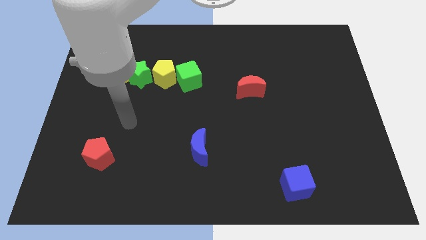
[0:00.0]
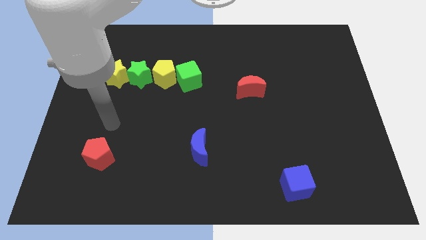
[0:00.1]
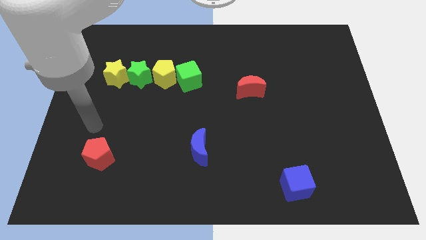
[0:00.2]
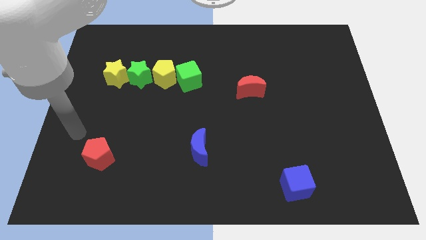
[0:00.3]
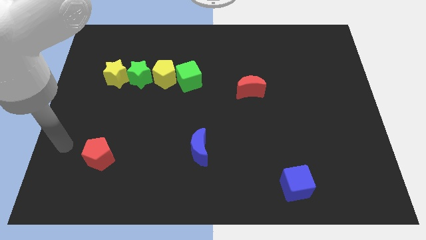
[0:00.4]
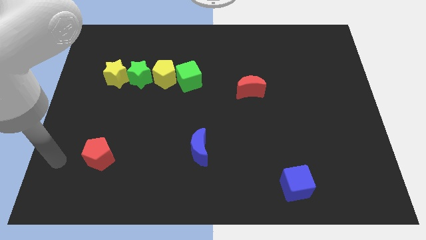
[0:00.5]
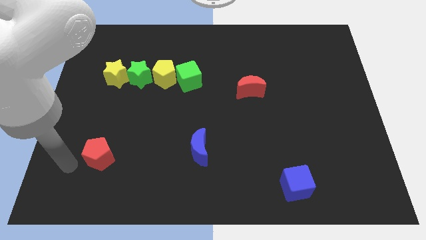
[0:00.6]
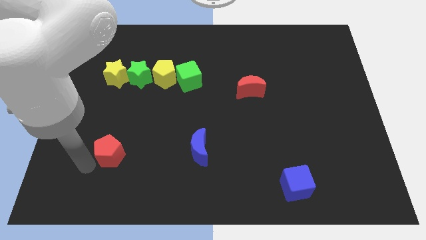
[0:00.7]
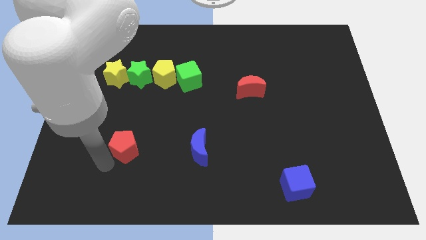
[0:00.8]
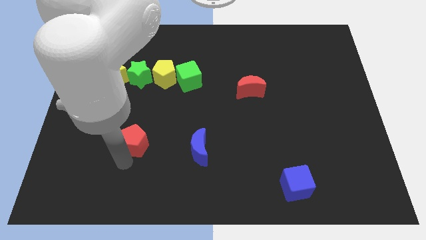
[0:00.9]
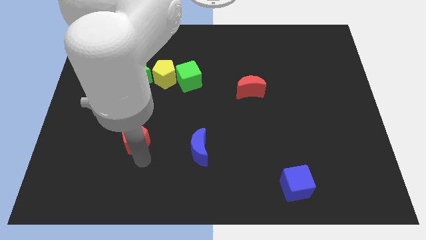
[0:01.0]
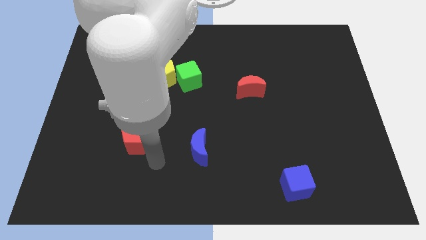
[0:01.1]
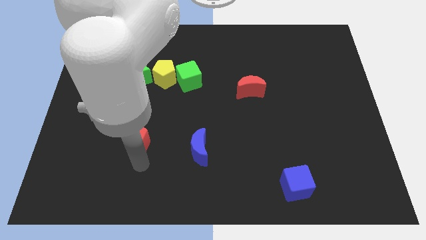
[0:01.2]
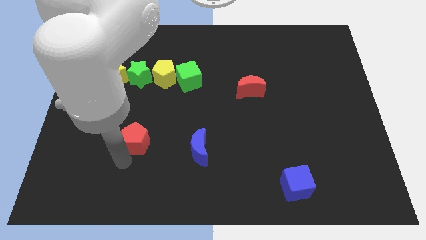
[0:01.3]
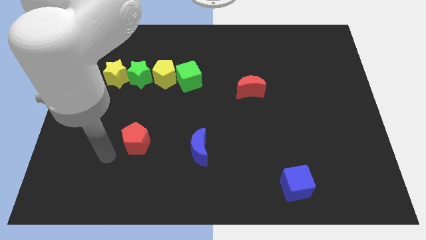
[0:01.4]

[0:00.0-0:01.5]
push red pentagon to the bottom of the green star

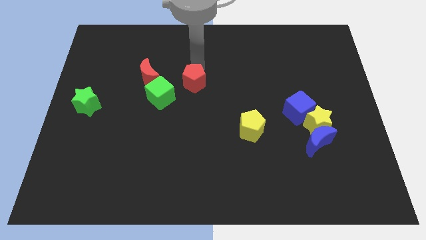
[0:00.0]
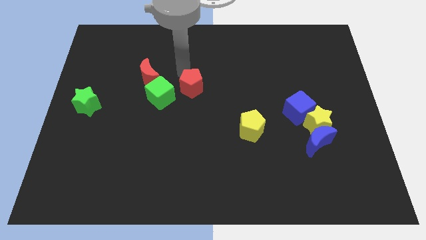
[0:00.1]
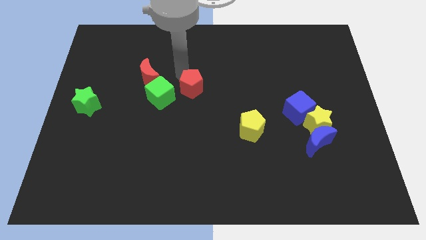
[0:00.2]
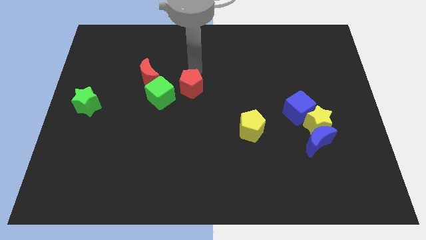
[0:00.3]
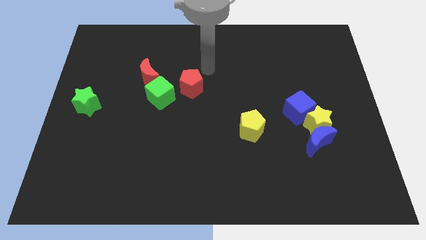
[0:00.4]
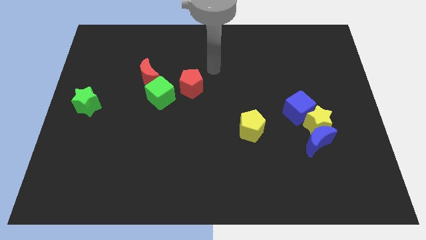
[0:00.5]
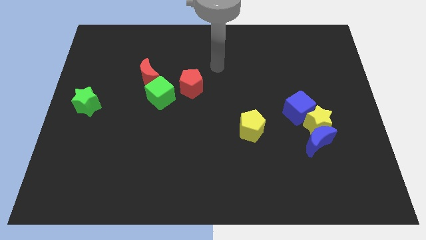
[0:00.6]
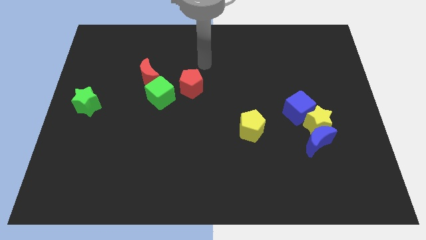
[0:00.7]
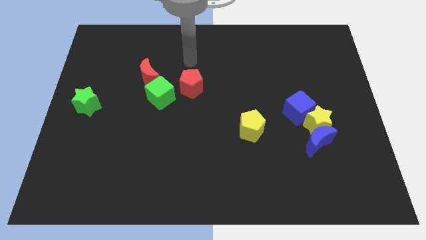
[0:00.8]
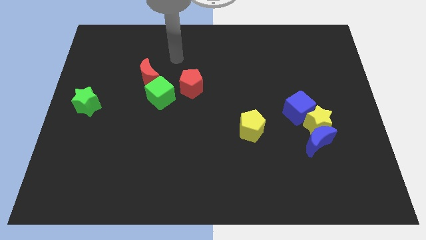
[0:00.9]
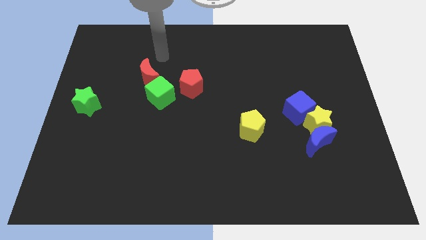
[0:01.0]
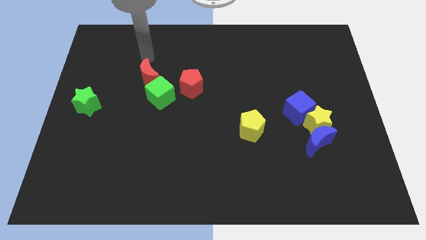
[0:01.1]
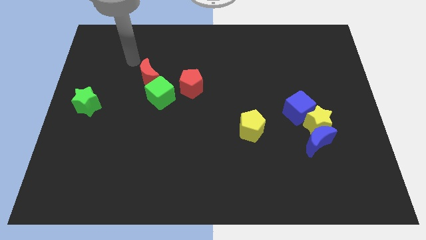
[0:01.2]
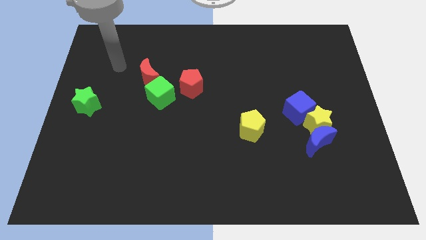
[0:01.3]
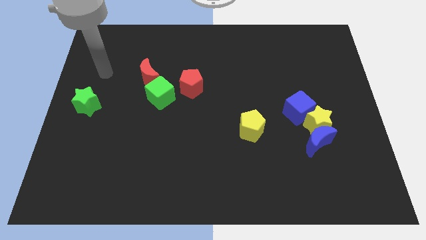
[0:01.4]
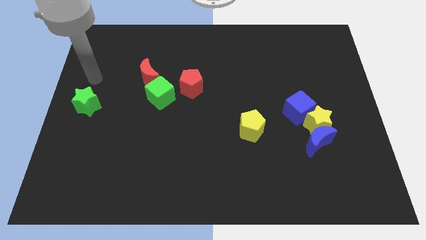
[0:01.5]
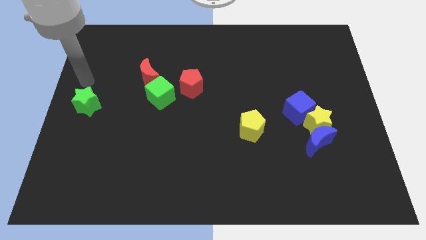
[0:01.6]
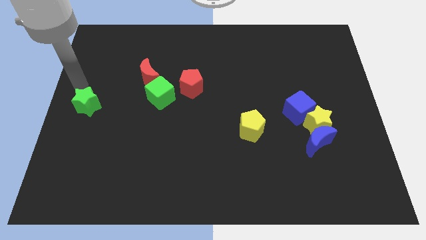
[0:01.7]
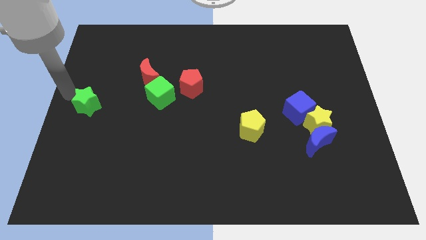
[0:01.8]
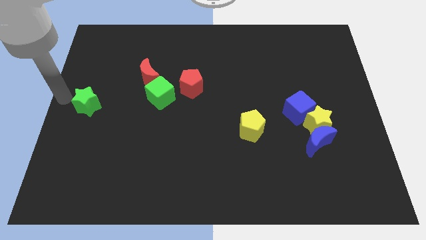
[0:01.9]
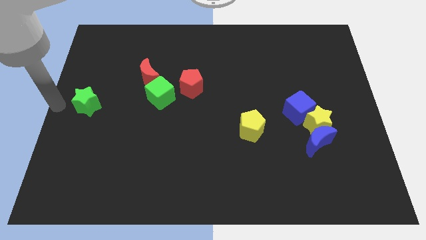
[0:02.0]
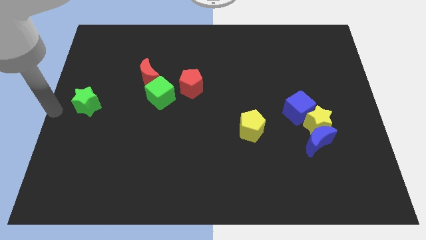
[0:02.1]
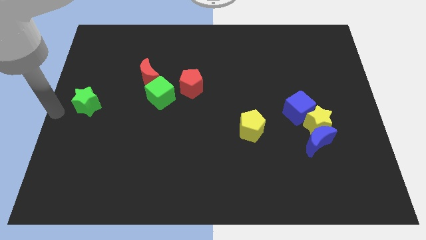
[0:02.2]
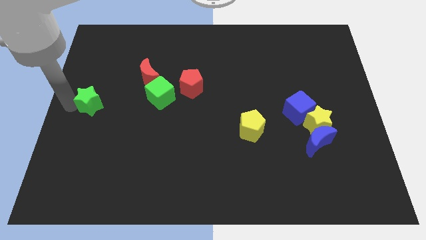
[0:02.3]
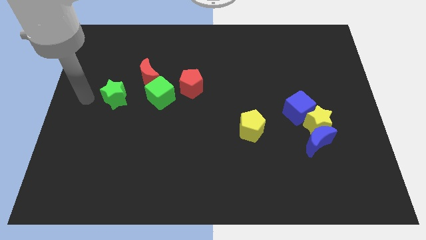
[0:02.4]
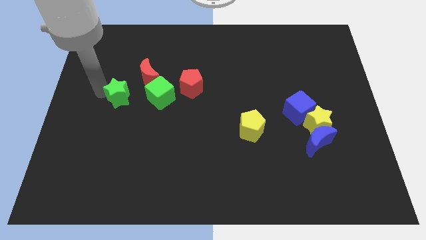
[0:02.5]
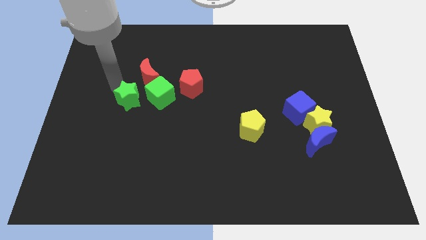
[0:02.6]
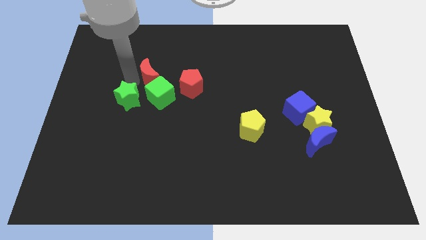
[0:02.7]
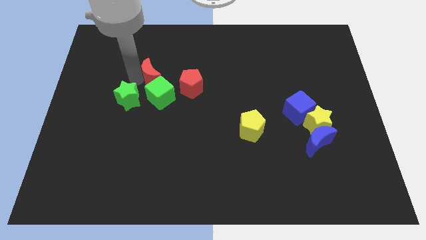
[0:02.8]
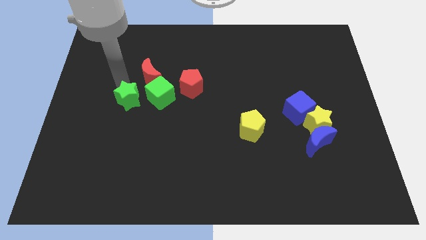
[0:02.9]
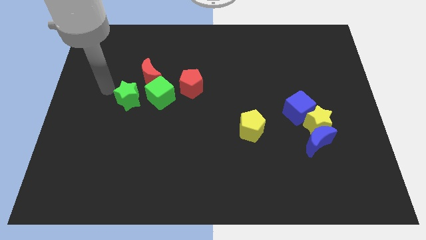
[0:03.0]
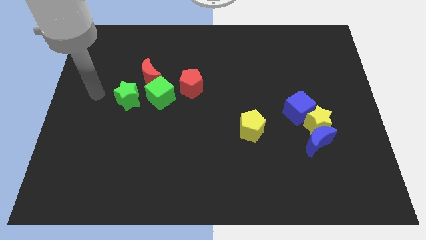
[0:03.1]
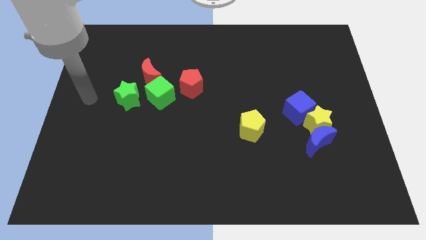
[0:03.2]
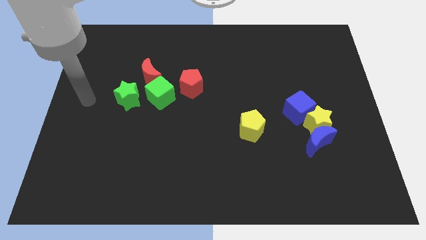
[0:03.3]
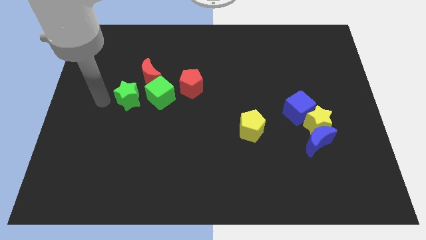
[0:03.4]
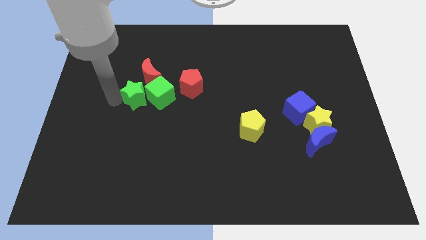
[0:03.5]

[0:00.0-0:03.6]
move the green star towards the left side of the green cube

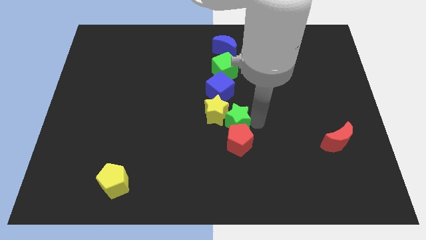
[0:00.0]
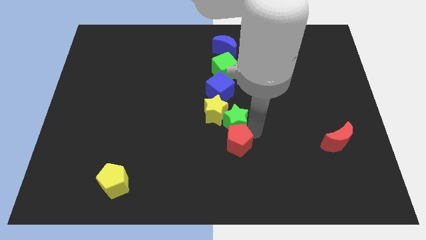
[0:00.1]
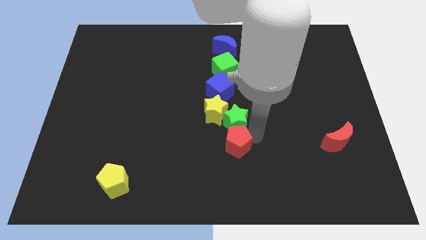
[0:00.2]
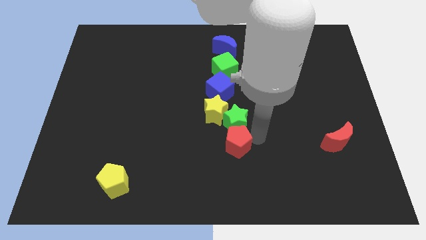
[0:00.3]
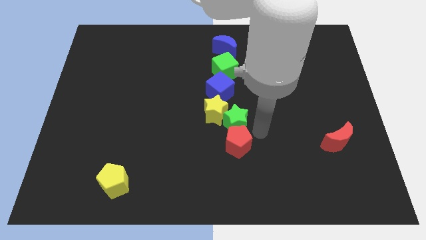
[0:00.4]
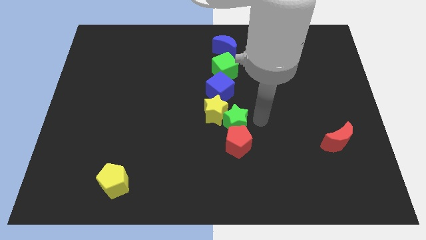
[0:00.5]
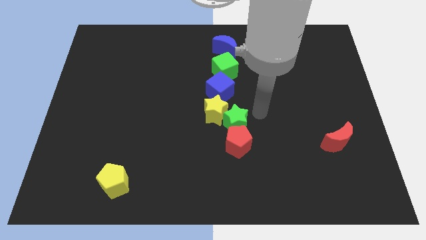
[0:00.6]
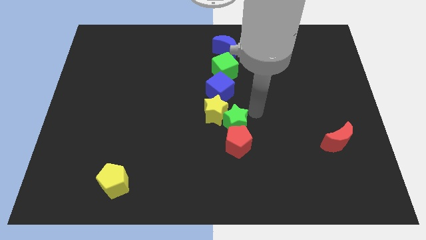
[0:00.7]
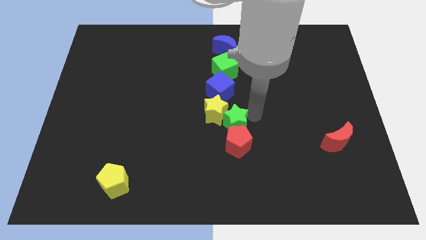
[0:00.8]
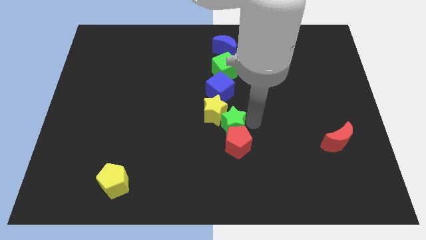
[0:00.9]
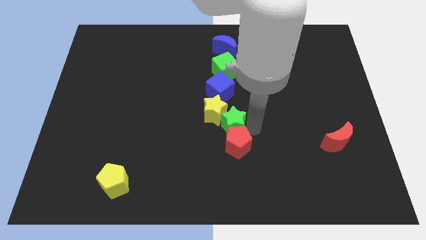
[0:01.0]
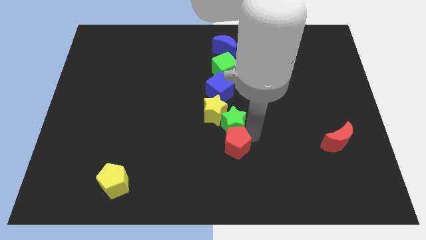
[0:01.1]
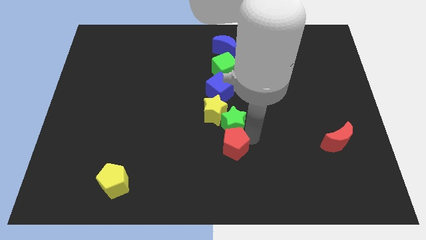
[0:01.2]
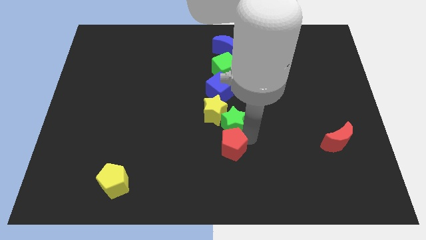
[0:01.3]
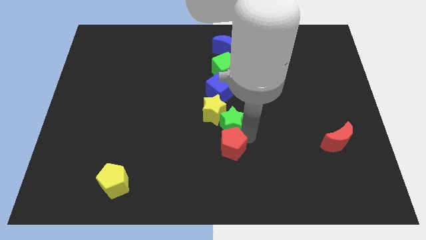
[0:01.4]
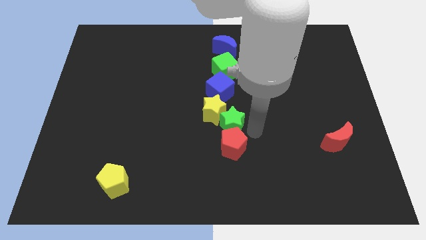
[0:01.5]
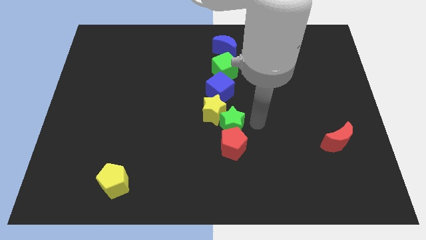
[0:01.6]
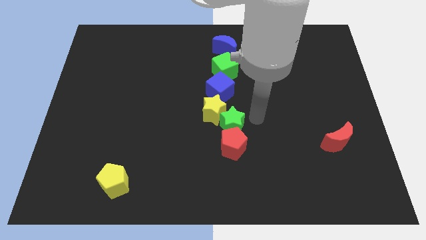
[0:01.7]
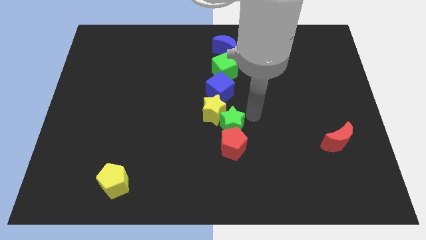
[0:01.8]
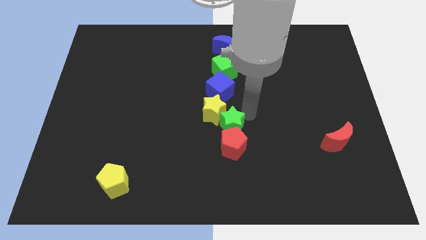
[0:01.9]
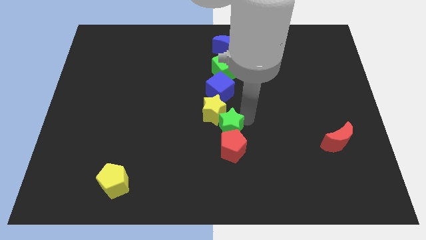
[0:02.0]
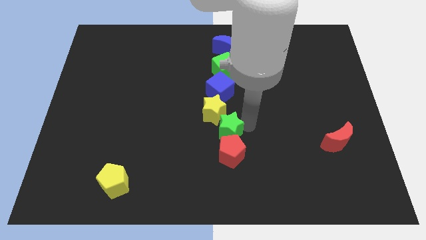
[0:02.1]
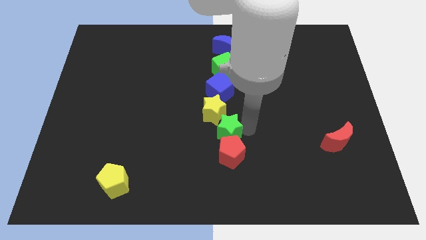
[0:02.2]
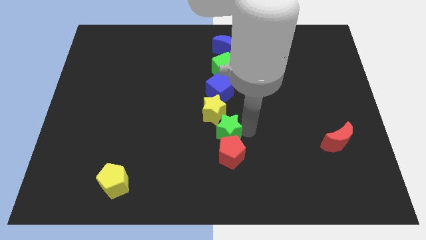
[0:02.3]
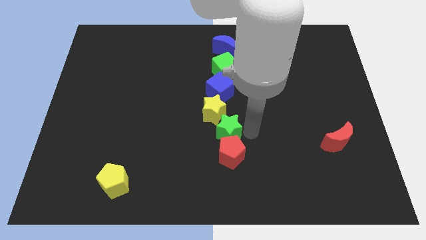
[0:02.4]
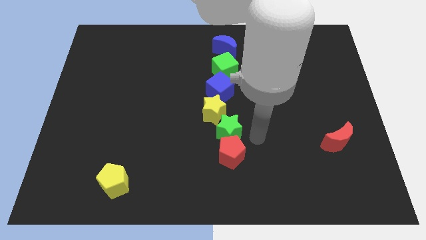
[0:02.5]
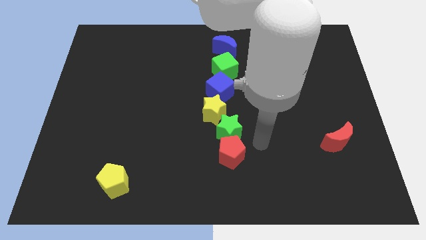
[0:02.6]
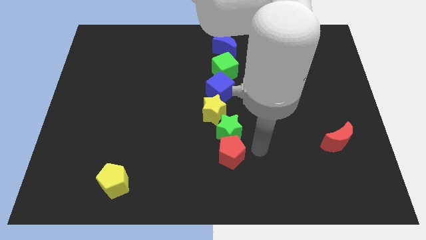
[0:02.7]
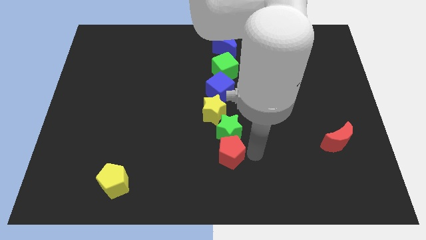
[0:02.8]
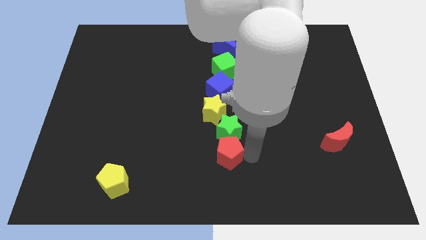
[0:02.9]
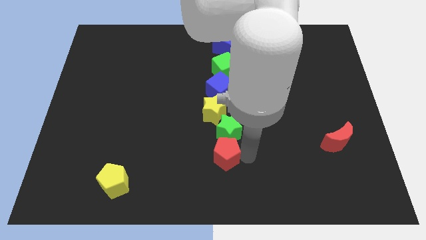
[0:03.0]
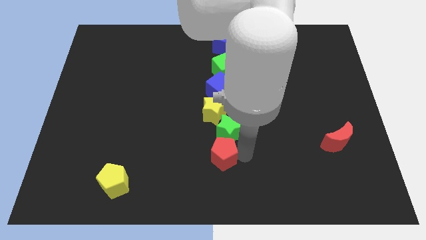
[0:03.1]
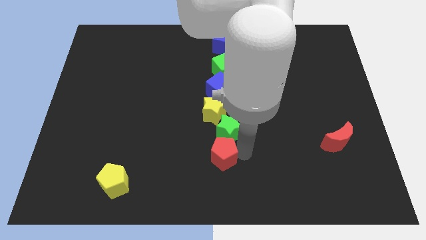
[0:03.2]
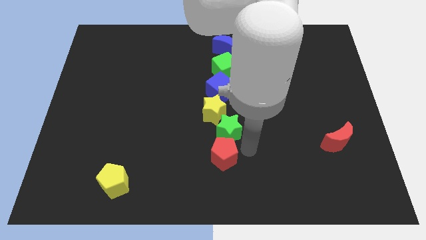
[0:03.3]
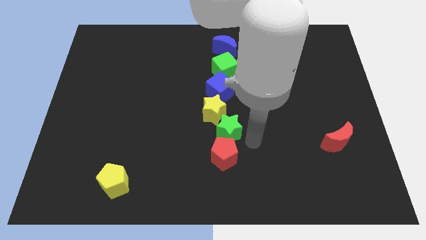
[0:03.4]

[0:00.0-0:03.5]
arrange the blocks in a line

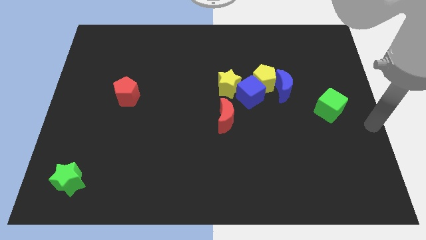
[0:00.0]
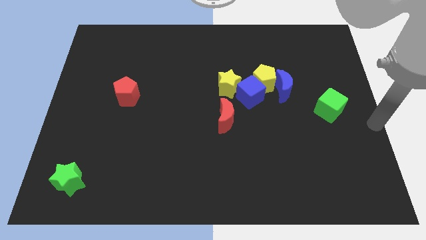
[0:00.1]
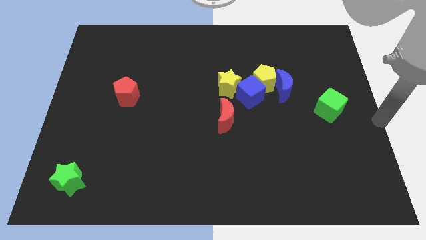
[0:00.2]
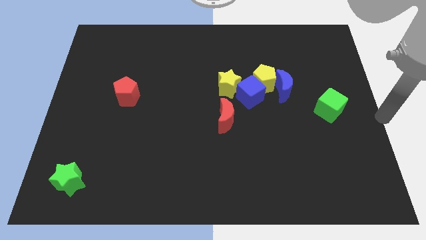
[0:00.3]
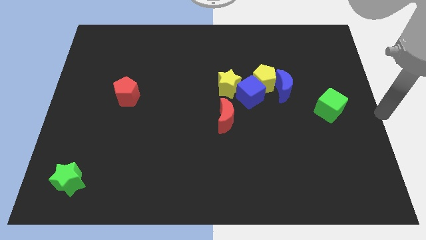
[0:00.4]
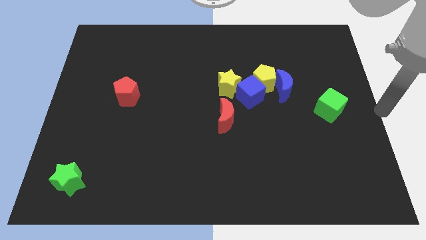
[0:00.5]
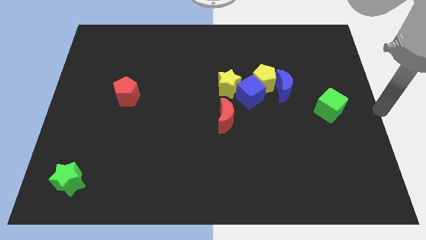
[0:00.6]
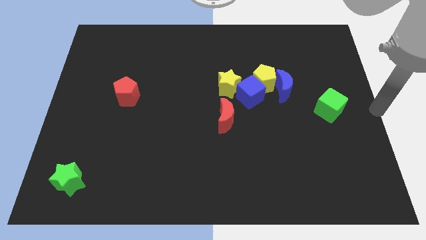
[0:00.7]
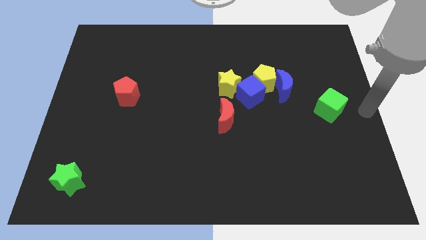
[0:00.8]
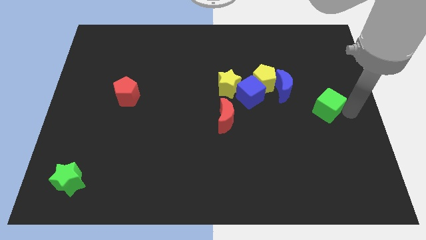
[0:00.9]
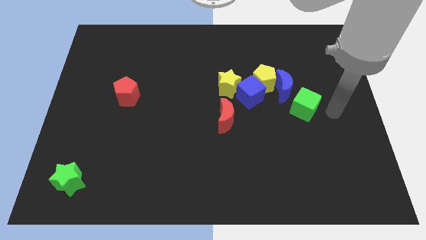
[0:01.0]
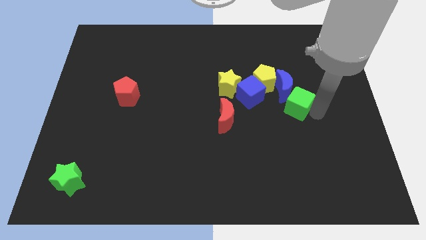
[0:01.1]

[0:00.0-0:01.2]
move the green cube slightly left
